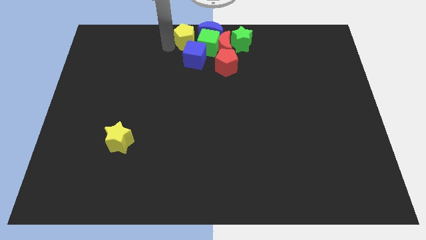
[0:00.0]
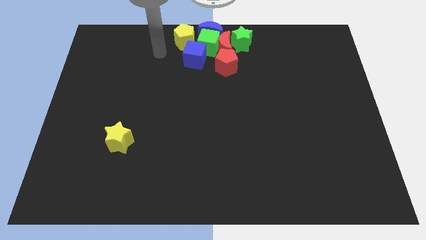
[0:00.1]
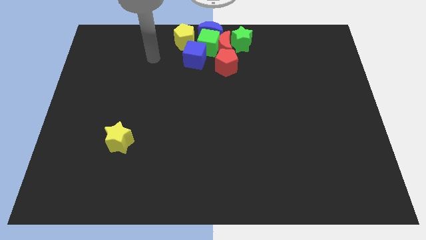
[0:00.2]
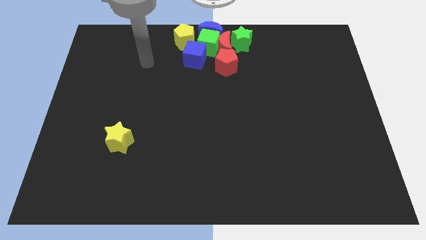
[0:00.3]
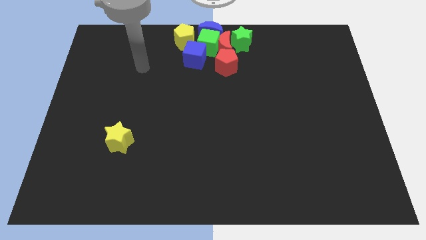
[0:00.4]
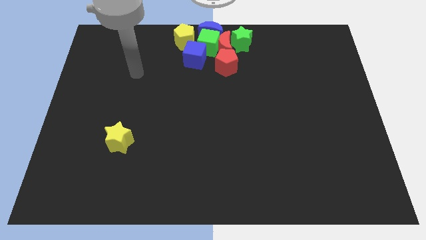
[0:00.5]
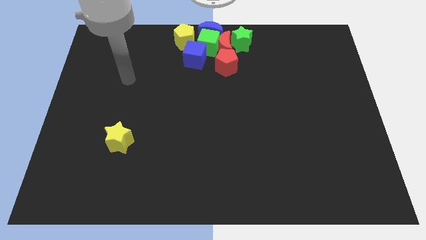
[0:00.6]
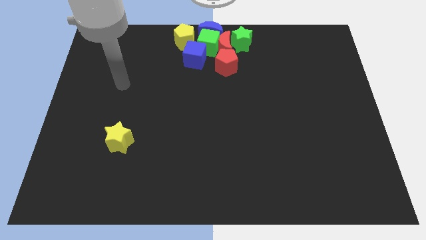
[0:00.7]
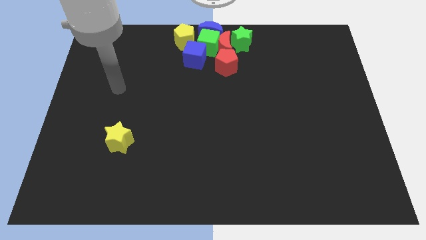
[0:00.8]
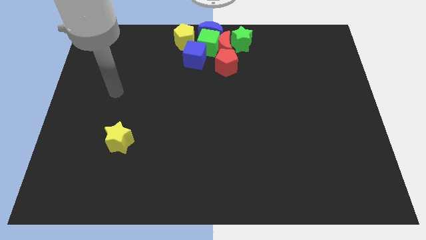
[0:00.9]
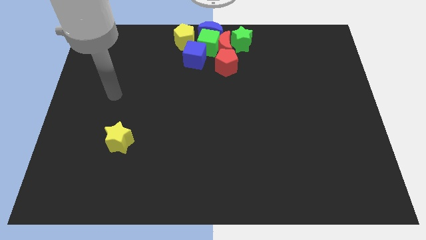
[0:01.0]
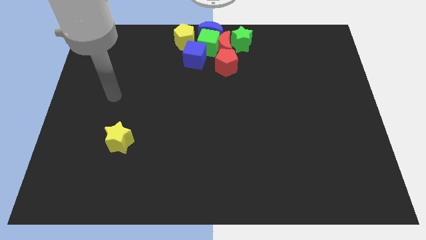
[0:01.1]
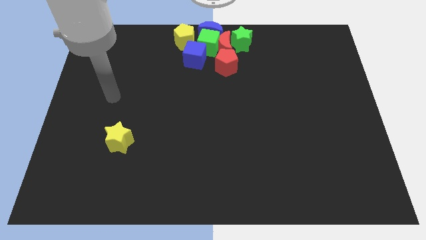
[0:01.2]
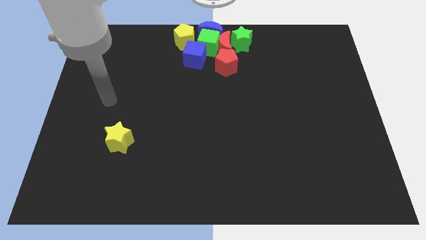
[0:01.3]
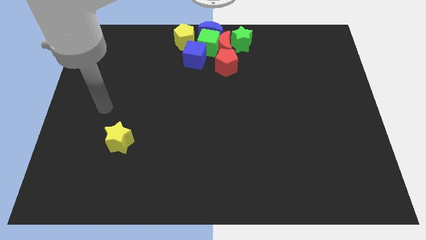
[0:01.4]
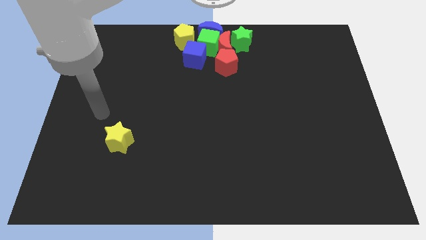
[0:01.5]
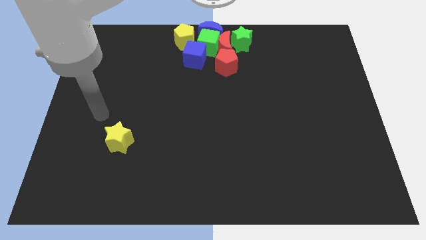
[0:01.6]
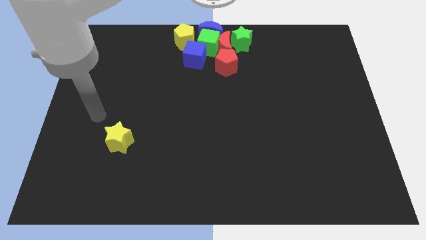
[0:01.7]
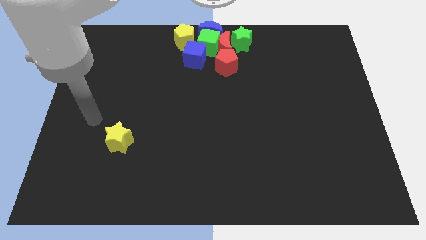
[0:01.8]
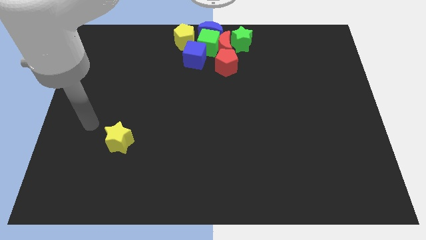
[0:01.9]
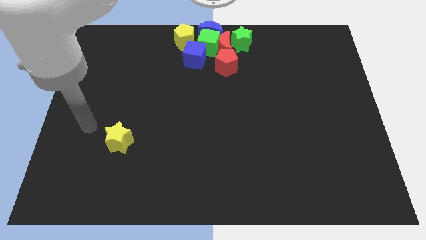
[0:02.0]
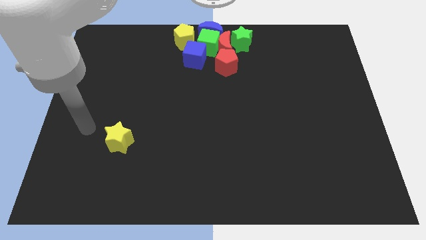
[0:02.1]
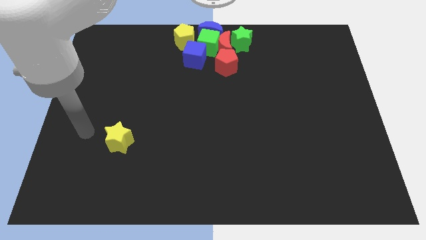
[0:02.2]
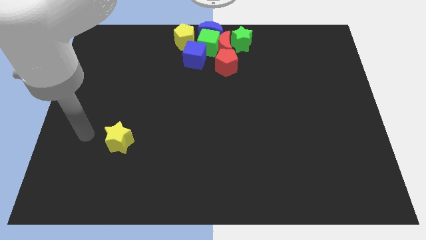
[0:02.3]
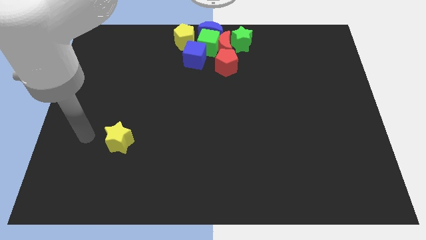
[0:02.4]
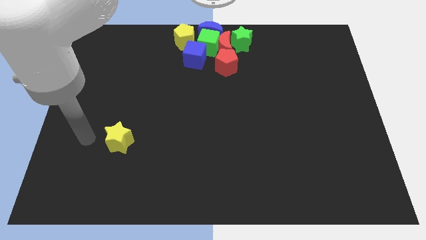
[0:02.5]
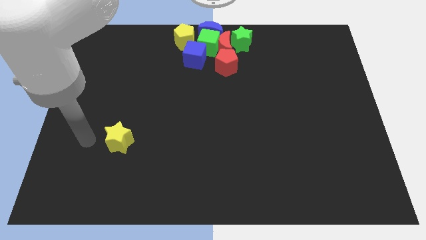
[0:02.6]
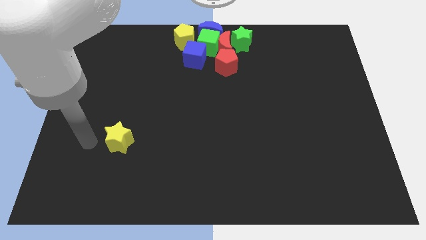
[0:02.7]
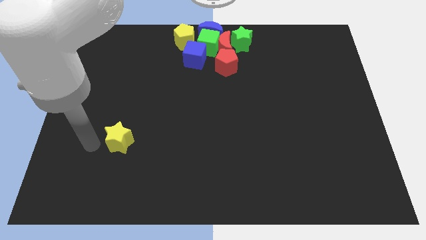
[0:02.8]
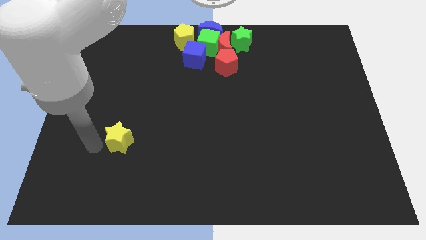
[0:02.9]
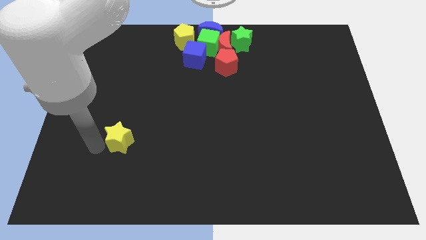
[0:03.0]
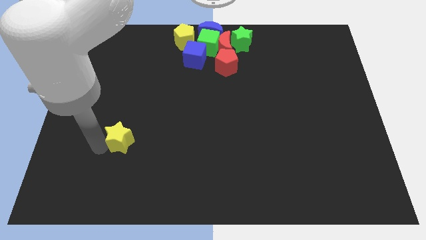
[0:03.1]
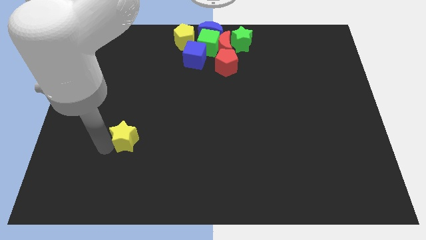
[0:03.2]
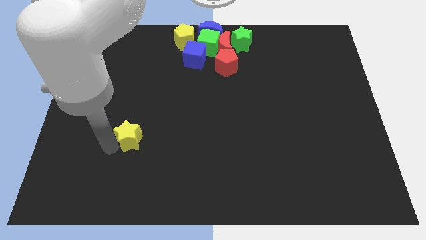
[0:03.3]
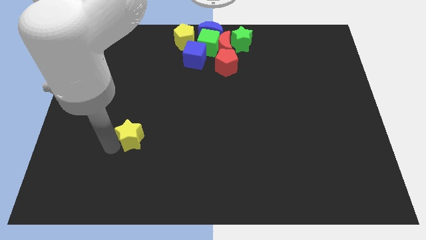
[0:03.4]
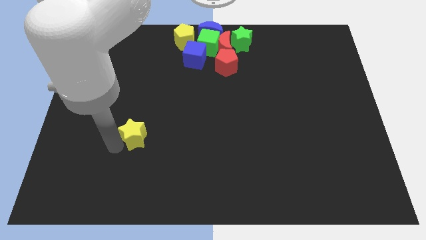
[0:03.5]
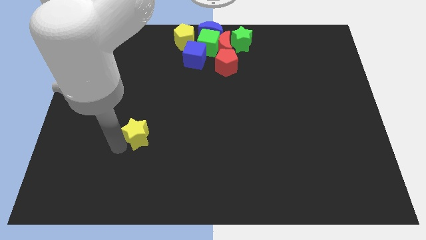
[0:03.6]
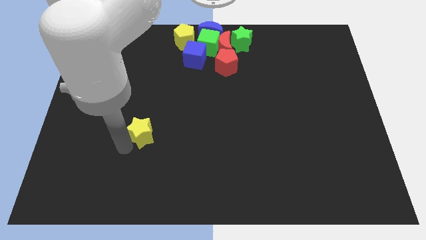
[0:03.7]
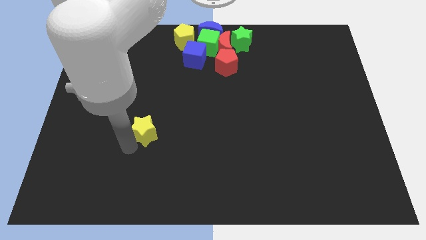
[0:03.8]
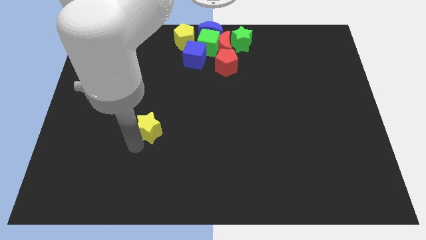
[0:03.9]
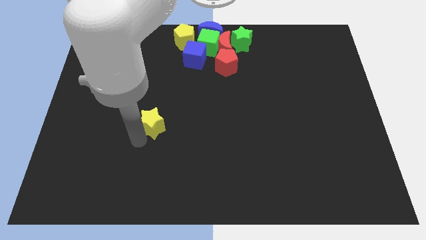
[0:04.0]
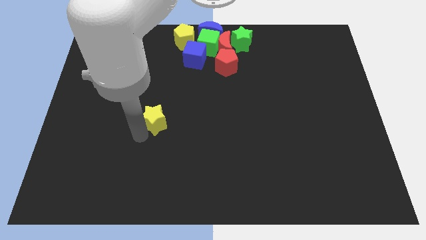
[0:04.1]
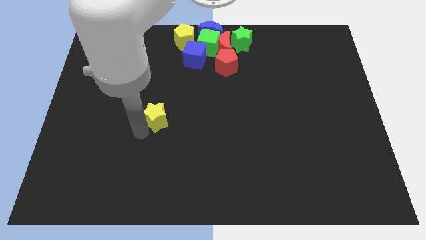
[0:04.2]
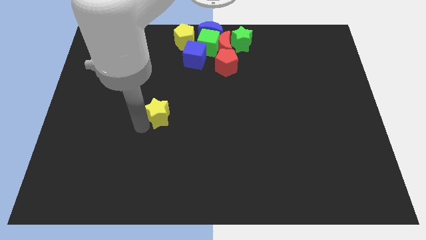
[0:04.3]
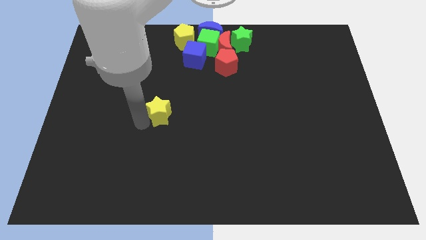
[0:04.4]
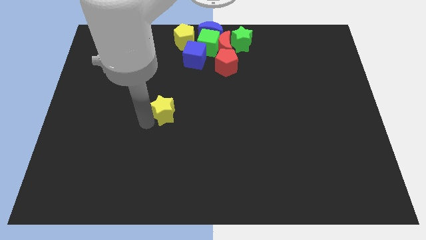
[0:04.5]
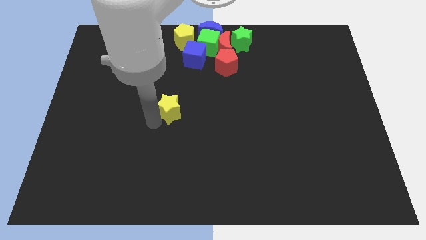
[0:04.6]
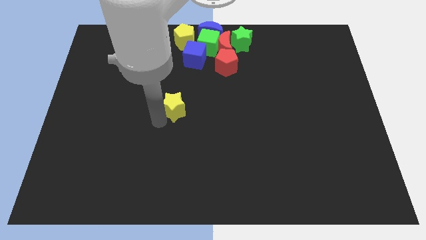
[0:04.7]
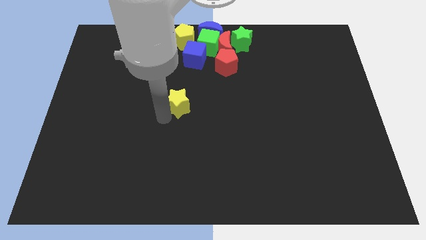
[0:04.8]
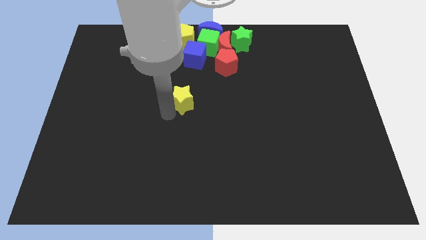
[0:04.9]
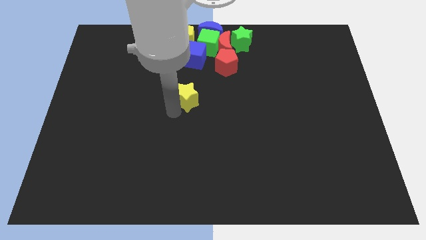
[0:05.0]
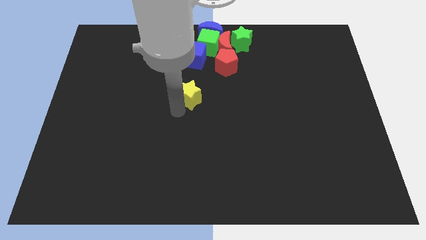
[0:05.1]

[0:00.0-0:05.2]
push the yellow star towards the center of the board

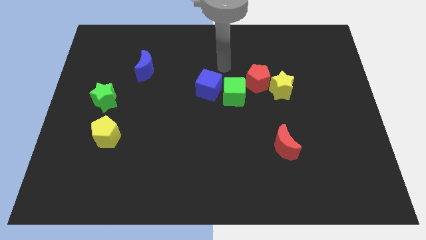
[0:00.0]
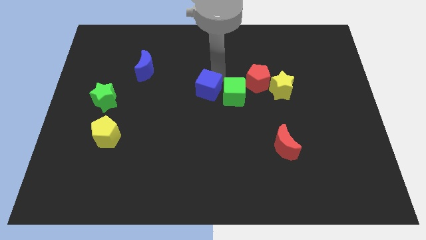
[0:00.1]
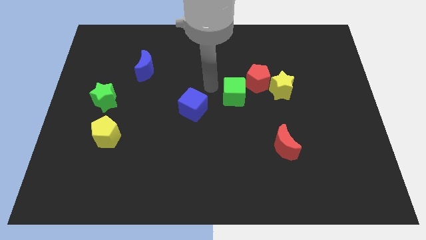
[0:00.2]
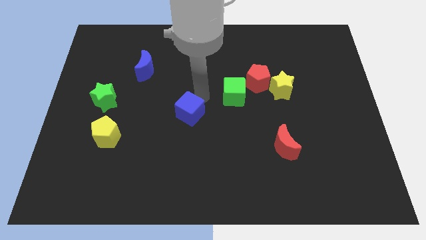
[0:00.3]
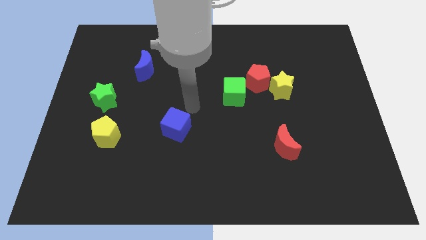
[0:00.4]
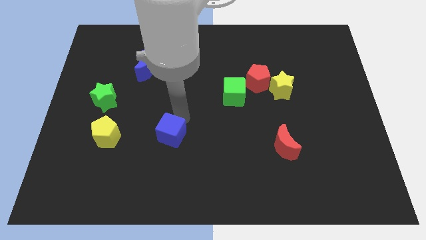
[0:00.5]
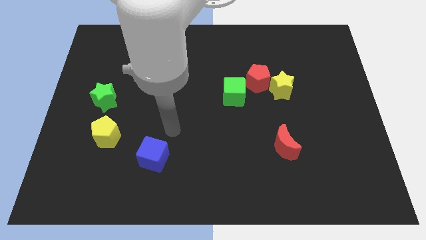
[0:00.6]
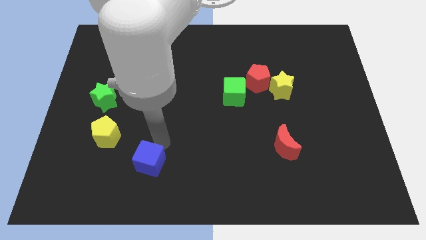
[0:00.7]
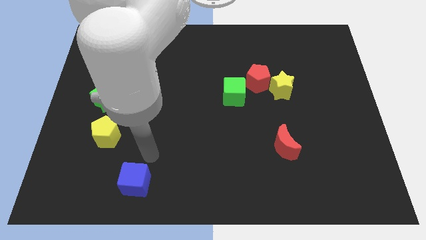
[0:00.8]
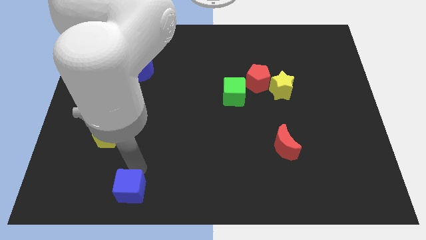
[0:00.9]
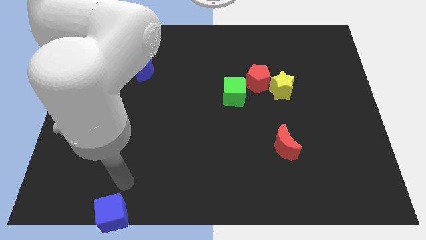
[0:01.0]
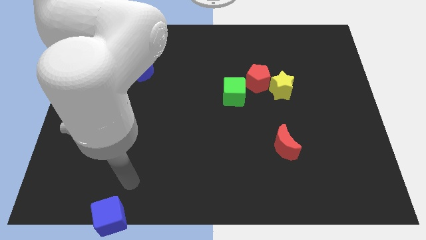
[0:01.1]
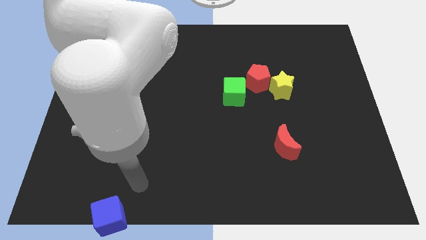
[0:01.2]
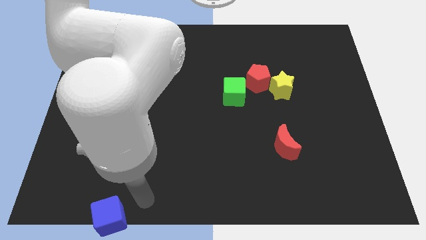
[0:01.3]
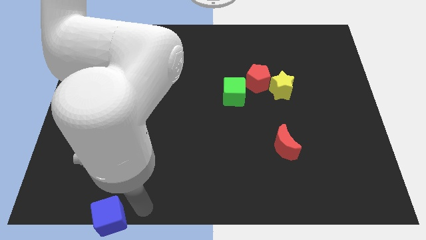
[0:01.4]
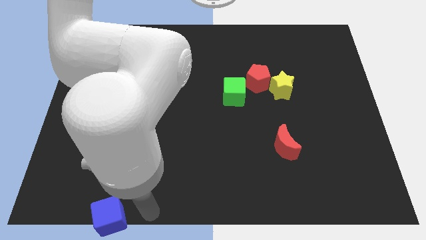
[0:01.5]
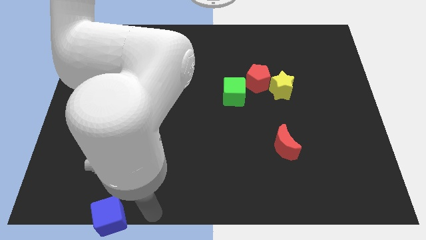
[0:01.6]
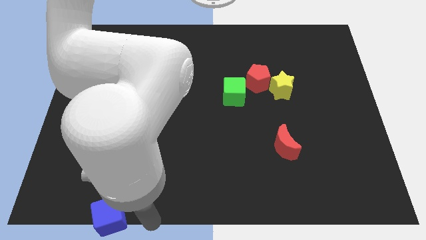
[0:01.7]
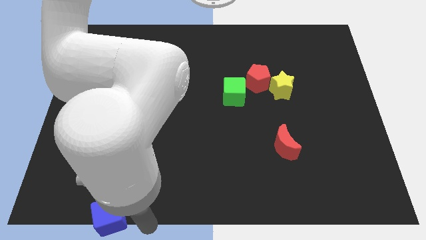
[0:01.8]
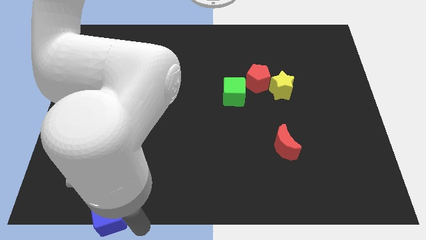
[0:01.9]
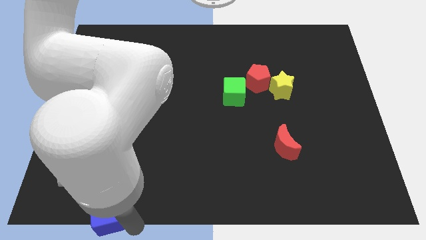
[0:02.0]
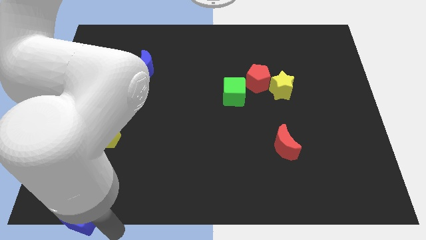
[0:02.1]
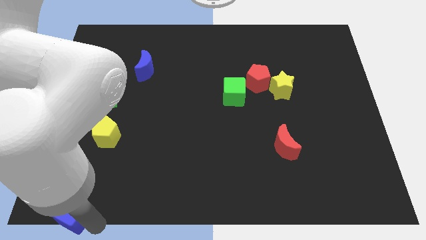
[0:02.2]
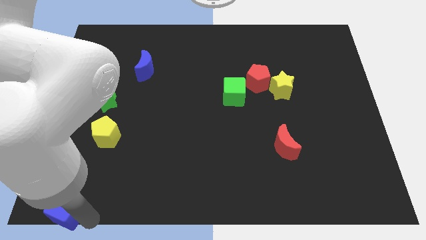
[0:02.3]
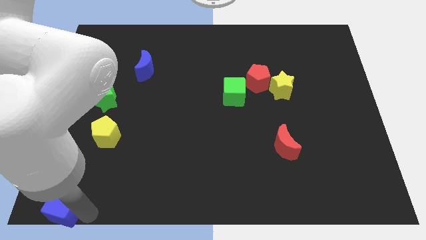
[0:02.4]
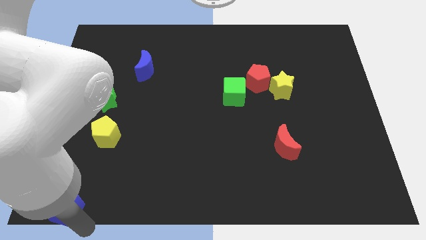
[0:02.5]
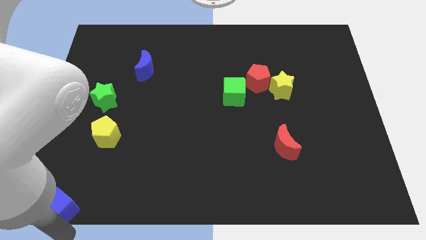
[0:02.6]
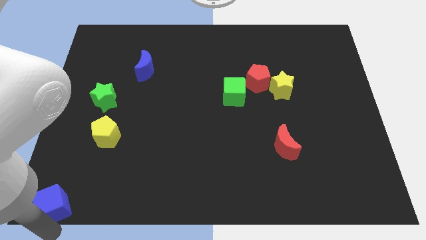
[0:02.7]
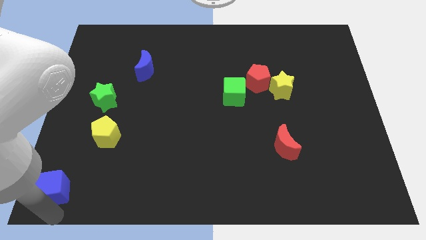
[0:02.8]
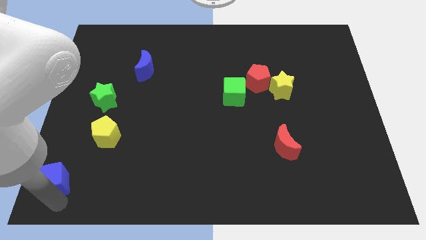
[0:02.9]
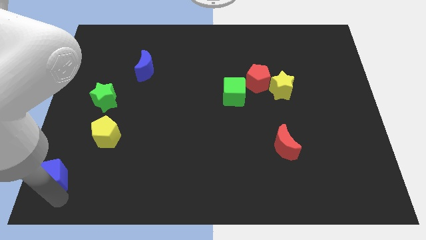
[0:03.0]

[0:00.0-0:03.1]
move blue cube to bottom left of yellow pentagon

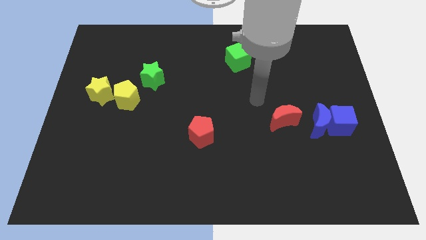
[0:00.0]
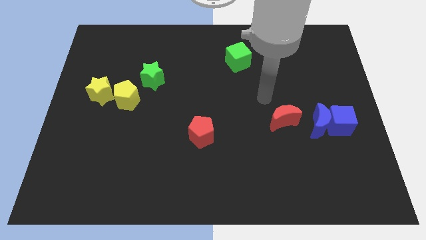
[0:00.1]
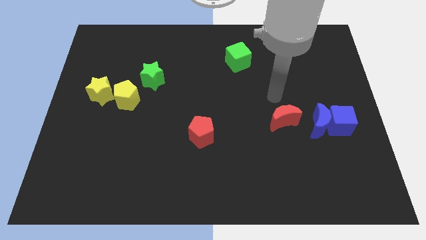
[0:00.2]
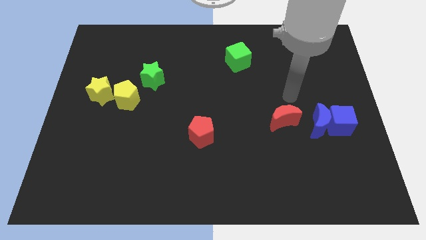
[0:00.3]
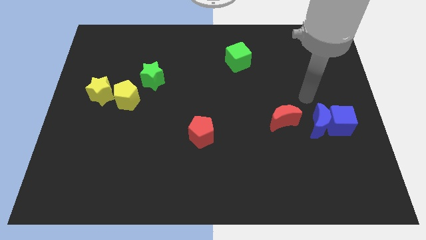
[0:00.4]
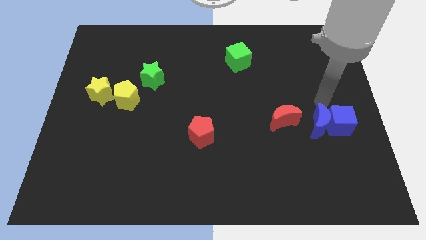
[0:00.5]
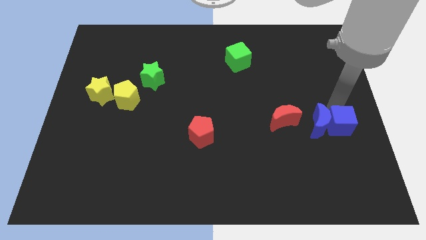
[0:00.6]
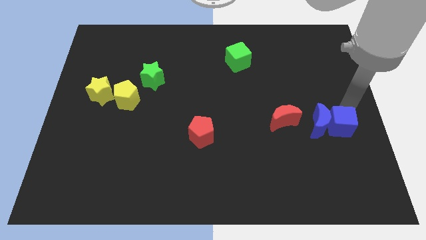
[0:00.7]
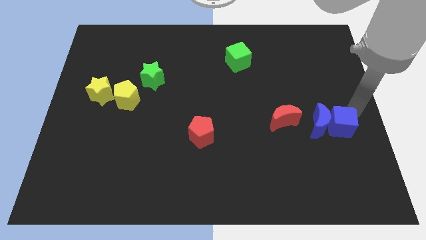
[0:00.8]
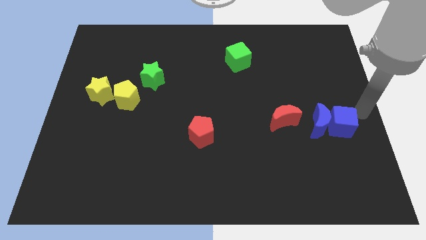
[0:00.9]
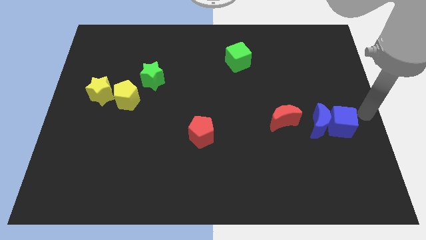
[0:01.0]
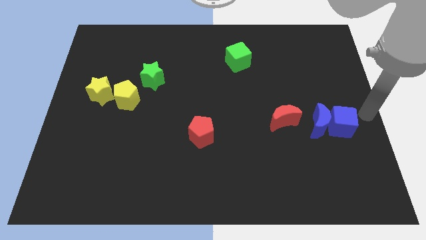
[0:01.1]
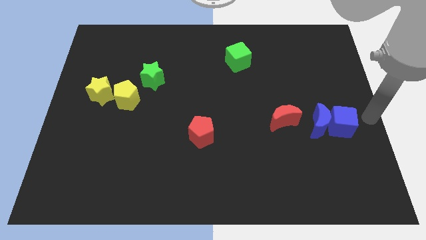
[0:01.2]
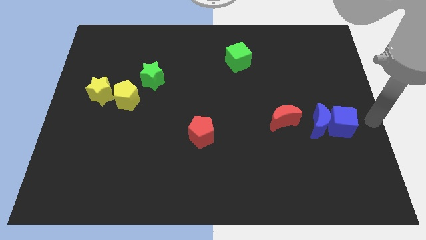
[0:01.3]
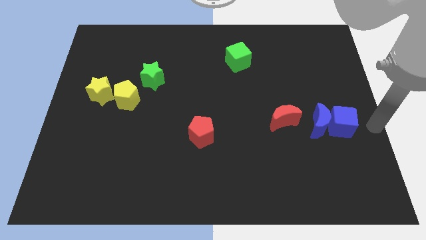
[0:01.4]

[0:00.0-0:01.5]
go and tap the blue cube
